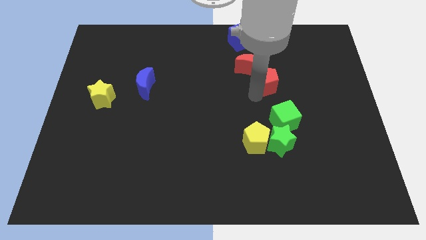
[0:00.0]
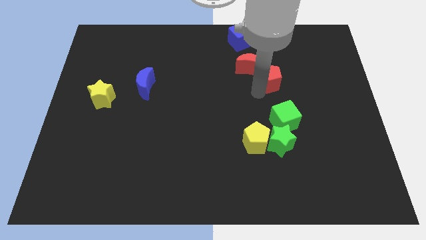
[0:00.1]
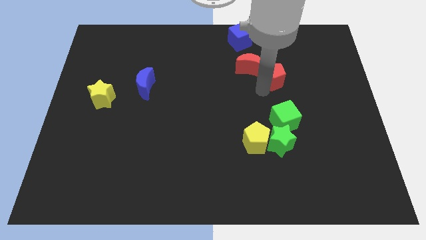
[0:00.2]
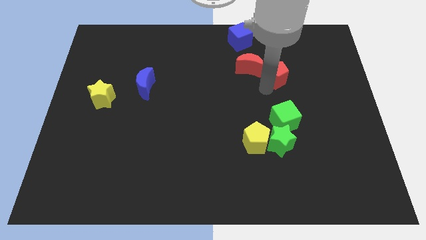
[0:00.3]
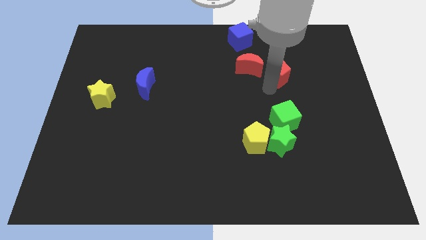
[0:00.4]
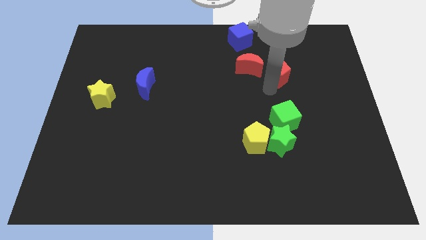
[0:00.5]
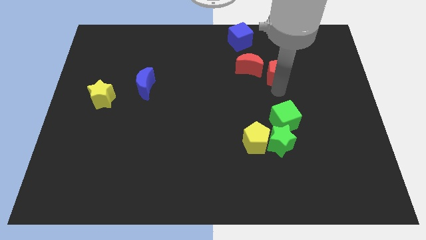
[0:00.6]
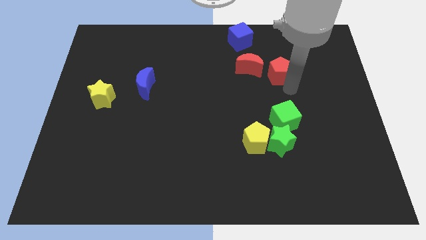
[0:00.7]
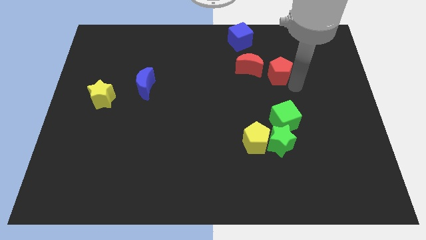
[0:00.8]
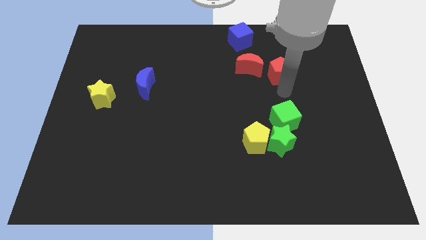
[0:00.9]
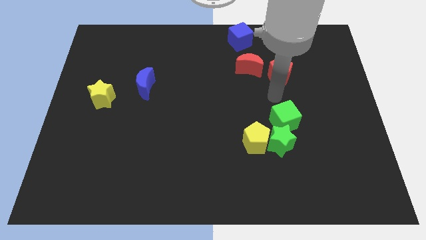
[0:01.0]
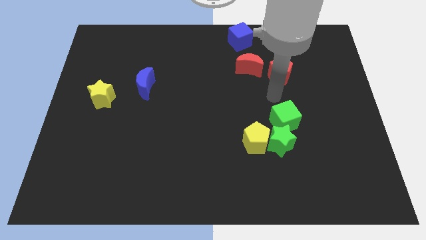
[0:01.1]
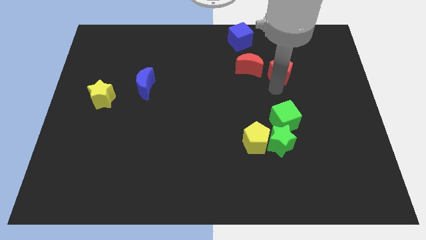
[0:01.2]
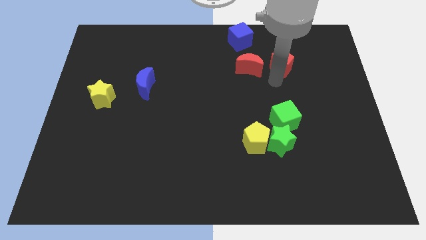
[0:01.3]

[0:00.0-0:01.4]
put the red pentagon to the right side of red moon

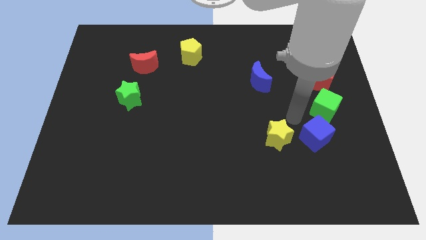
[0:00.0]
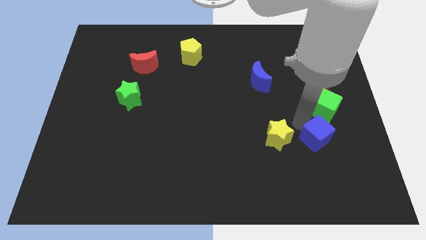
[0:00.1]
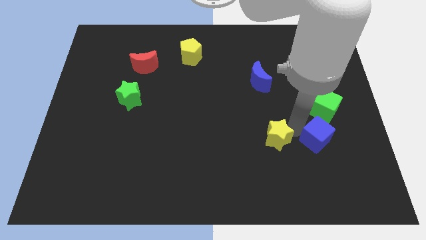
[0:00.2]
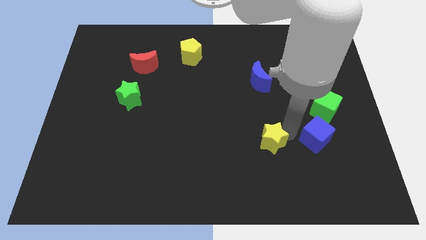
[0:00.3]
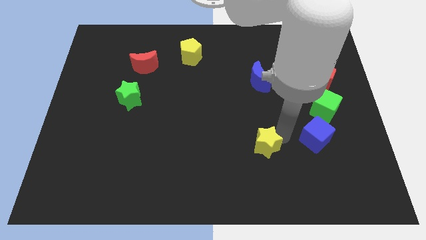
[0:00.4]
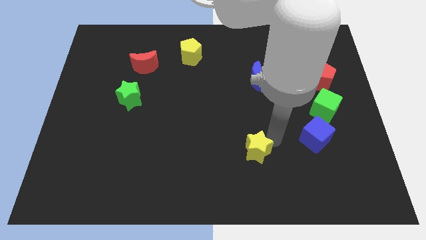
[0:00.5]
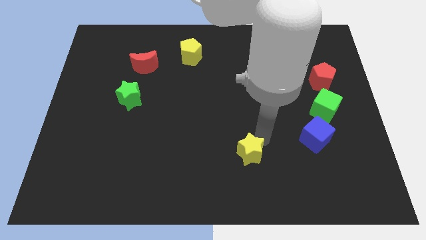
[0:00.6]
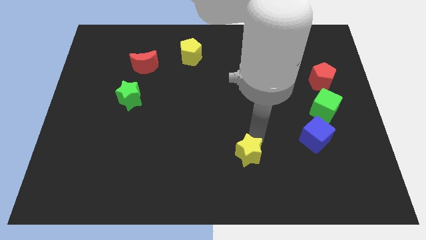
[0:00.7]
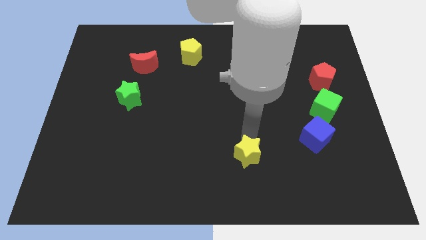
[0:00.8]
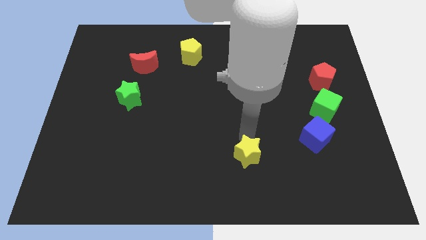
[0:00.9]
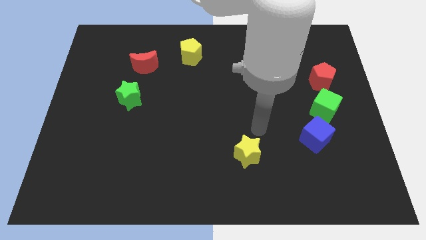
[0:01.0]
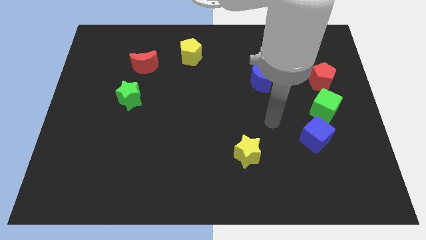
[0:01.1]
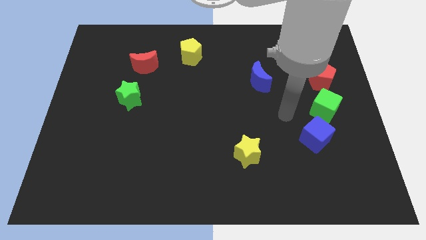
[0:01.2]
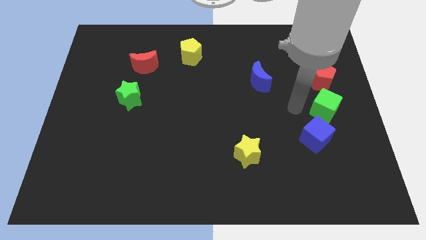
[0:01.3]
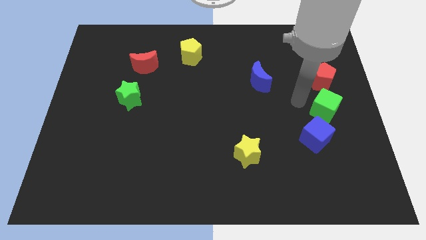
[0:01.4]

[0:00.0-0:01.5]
push the yellow star diagonally on the bottom left side of the blue crescent

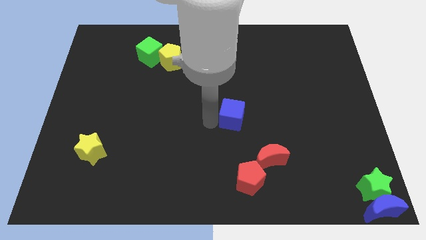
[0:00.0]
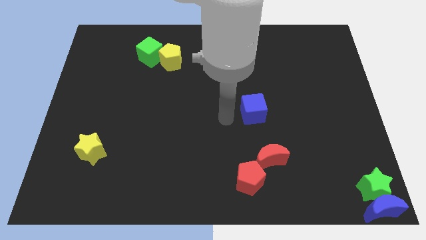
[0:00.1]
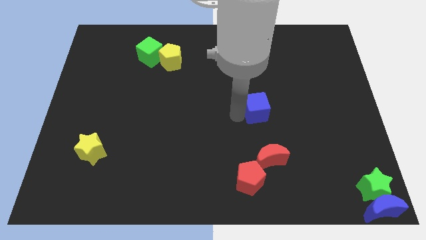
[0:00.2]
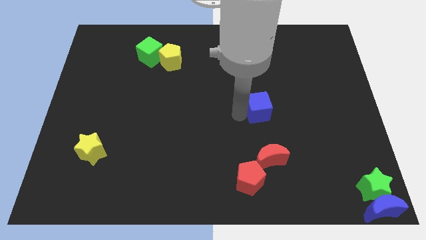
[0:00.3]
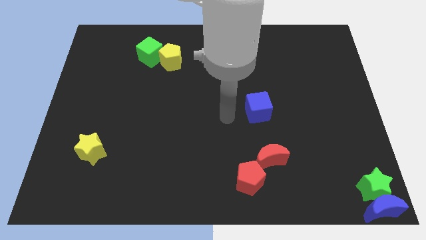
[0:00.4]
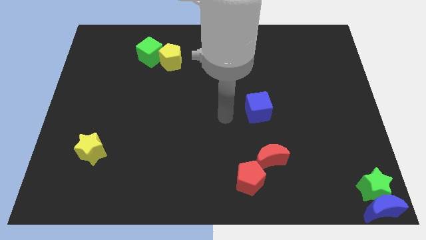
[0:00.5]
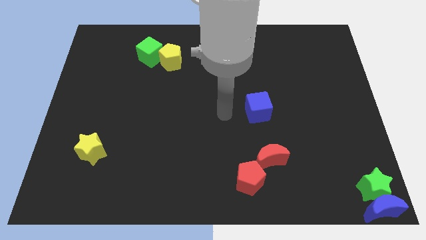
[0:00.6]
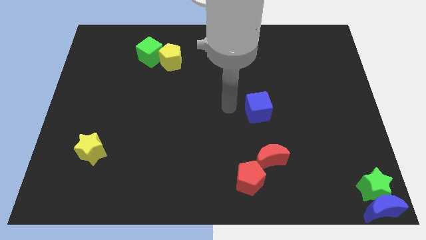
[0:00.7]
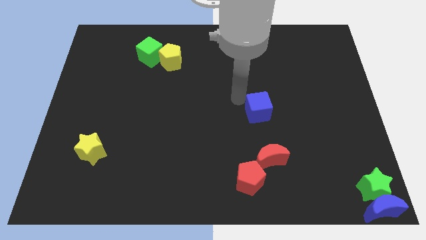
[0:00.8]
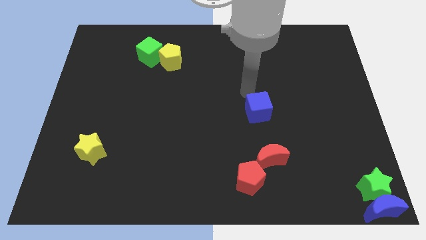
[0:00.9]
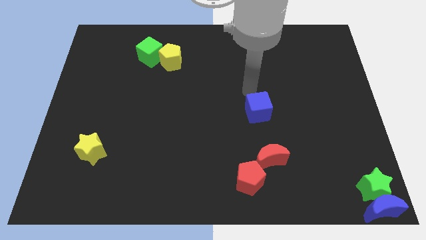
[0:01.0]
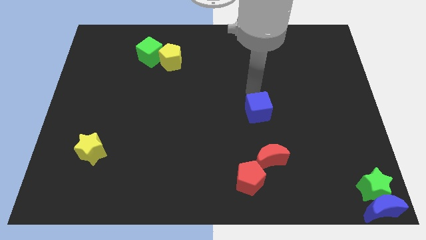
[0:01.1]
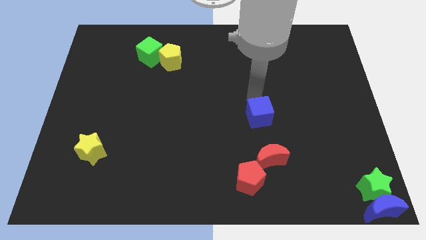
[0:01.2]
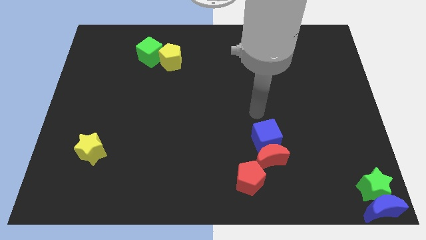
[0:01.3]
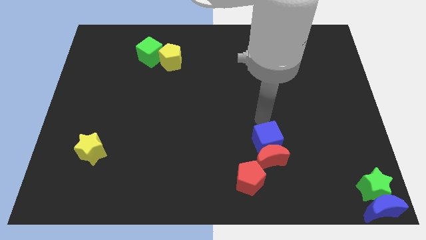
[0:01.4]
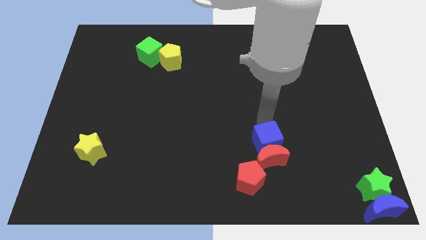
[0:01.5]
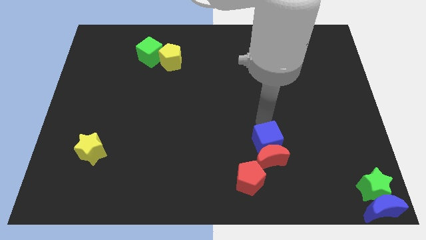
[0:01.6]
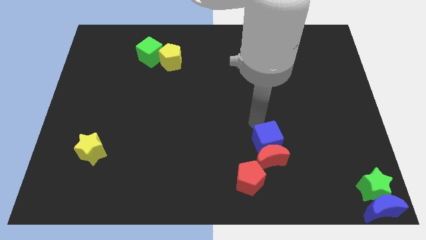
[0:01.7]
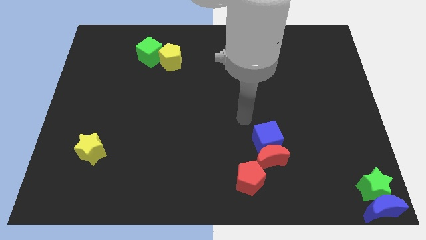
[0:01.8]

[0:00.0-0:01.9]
make the blue cube to touch the top side of the red crescent

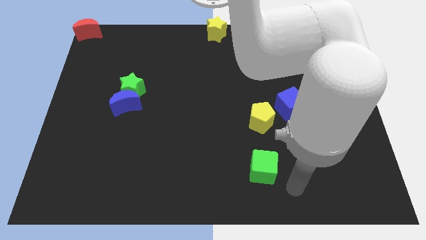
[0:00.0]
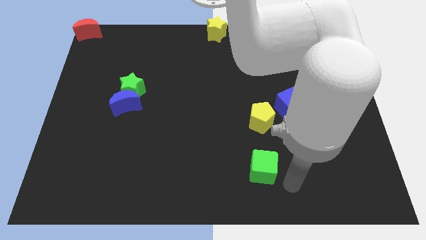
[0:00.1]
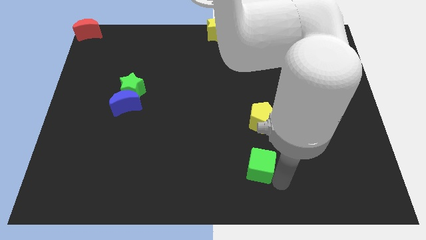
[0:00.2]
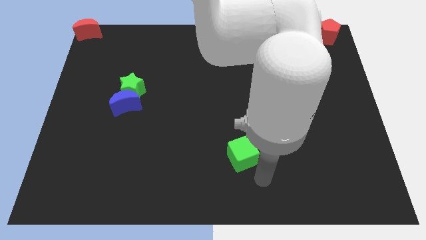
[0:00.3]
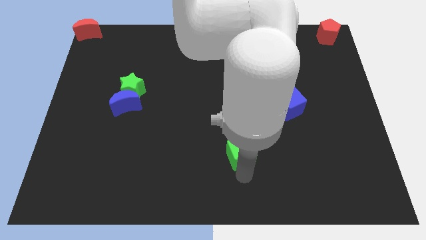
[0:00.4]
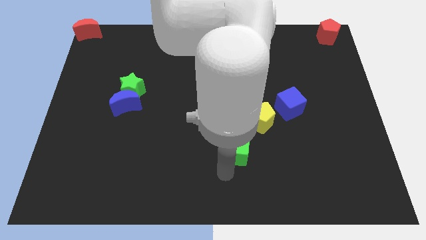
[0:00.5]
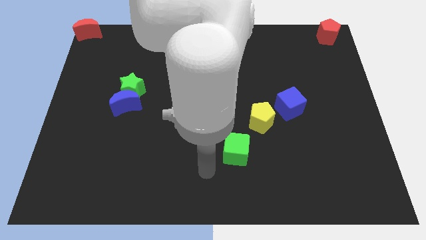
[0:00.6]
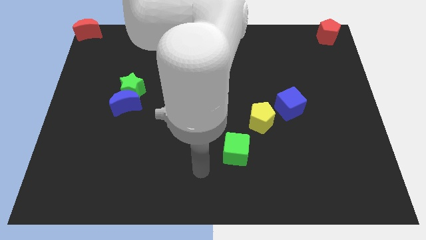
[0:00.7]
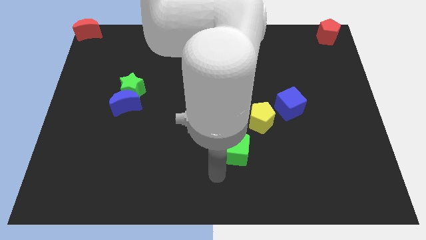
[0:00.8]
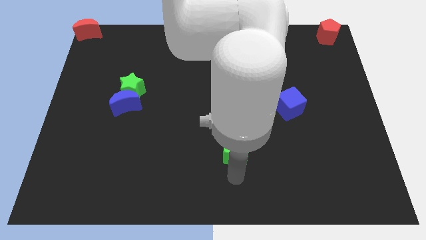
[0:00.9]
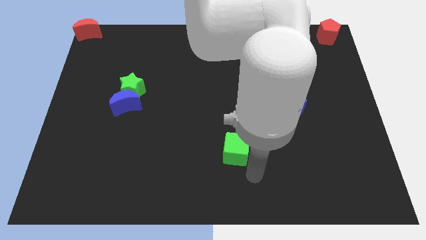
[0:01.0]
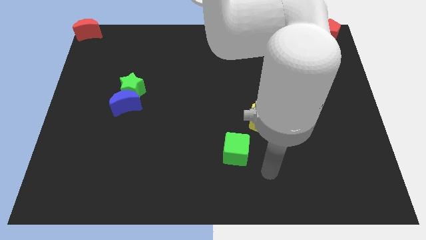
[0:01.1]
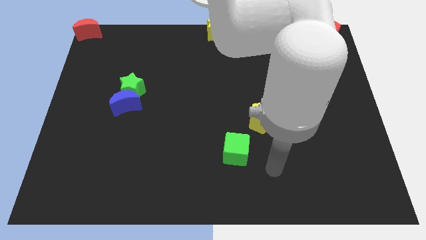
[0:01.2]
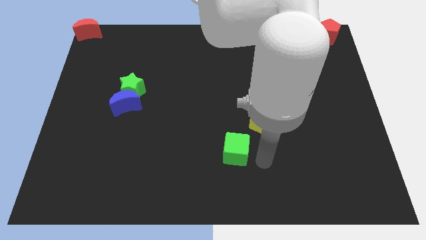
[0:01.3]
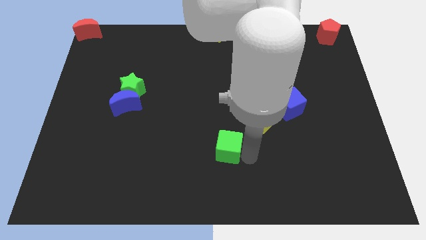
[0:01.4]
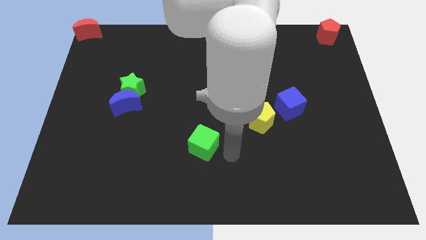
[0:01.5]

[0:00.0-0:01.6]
move the green cube diagonally bottom left to the yellow pentagon

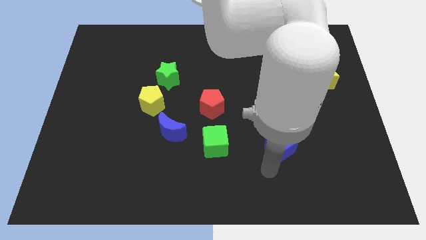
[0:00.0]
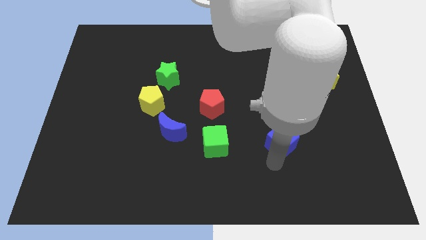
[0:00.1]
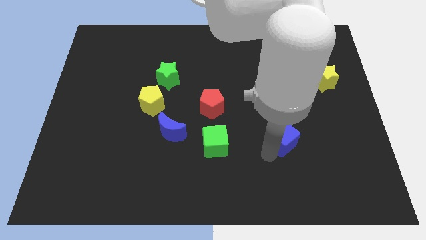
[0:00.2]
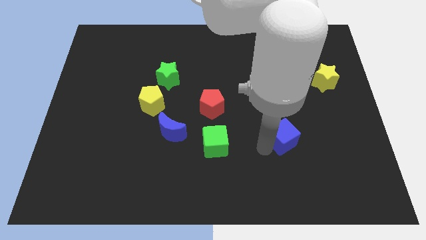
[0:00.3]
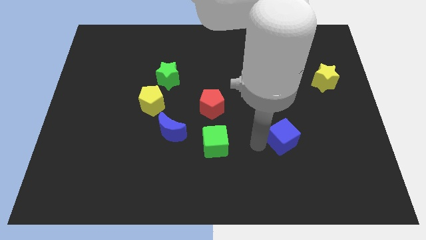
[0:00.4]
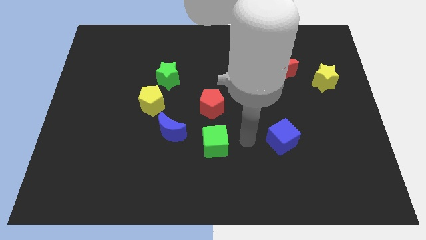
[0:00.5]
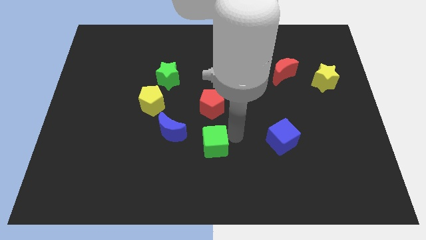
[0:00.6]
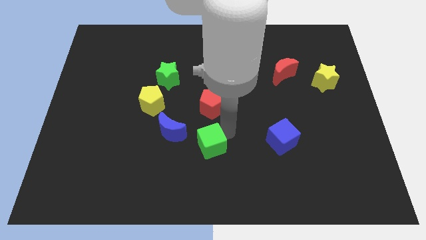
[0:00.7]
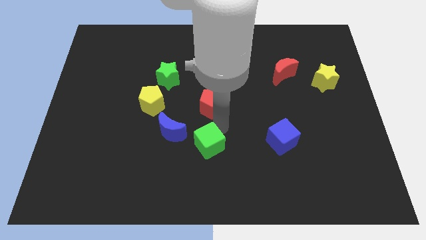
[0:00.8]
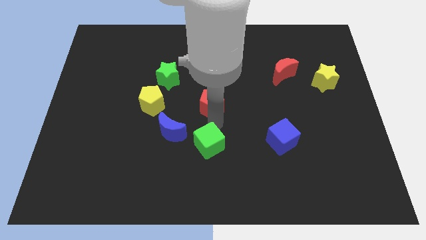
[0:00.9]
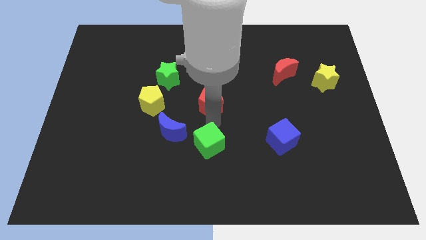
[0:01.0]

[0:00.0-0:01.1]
place the arm in between the green cube and red pentagon

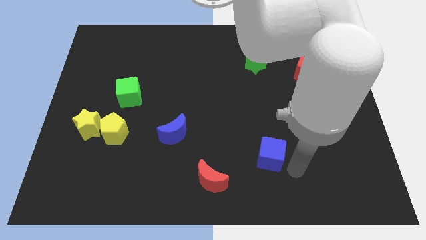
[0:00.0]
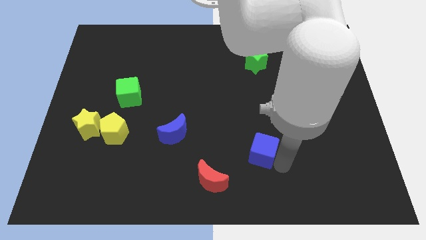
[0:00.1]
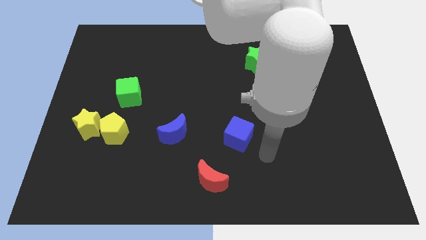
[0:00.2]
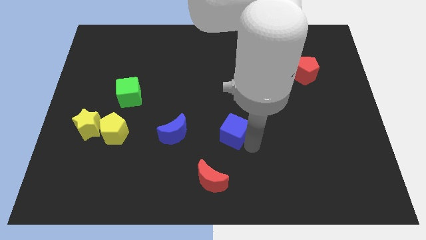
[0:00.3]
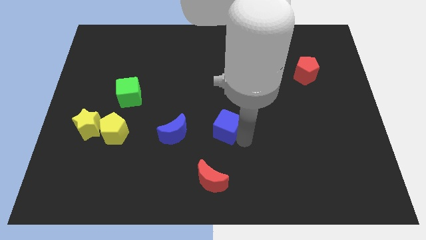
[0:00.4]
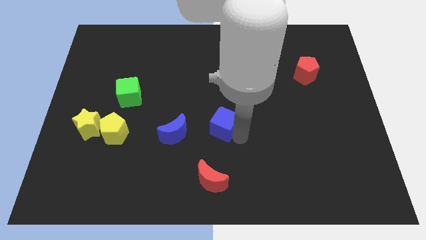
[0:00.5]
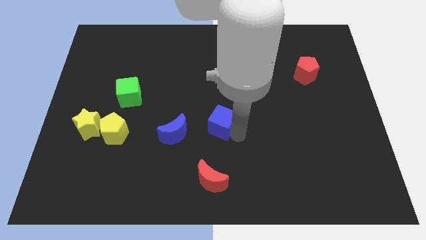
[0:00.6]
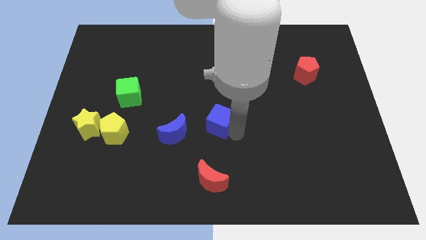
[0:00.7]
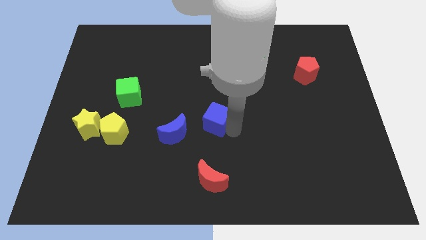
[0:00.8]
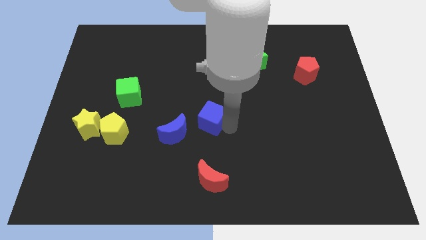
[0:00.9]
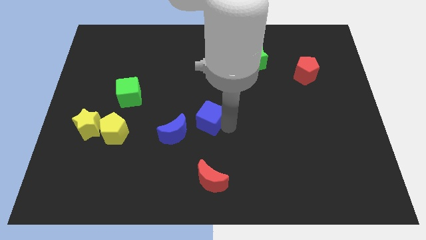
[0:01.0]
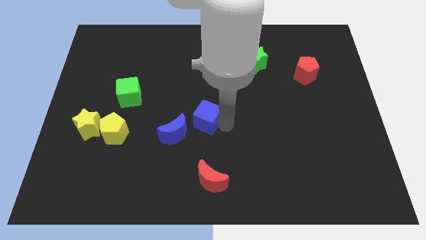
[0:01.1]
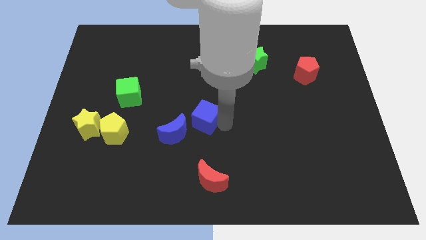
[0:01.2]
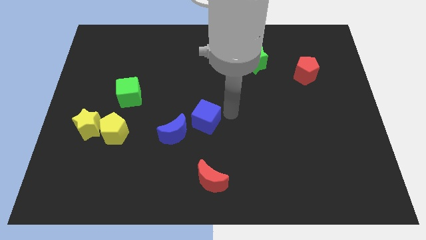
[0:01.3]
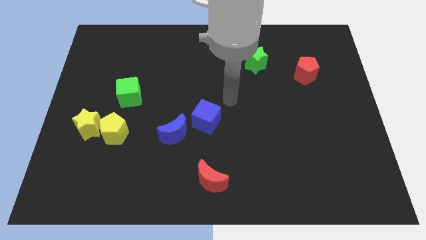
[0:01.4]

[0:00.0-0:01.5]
push the blue cube slightly towards the blue crescent
